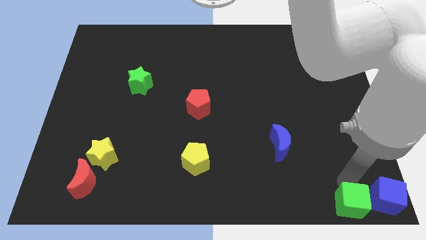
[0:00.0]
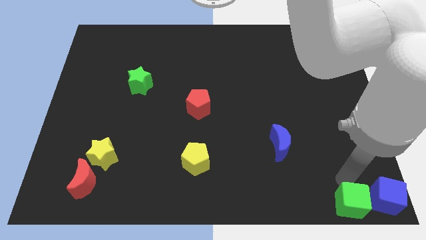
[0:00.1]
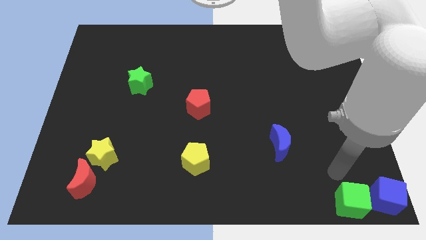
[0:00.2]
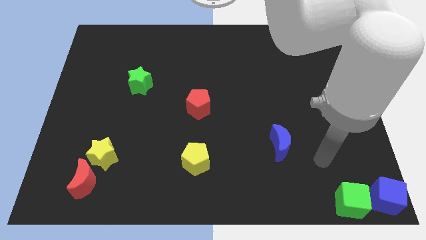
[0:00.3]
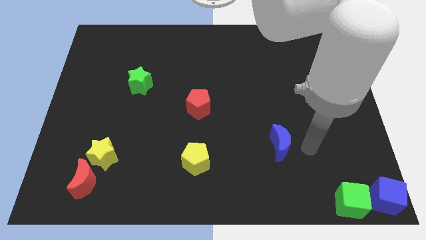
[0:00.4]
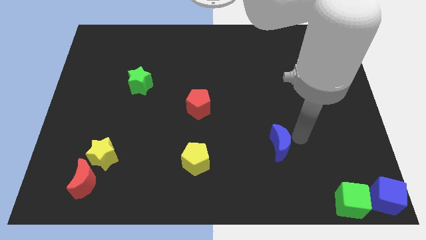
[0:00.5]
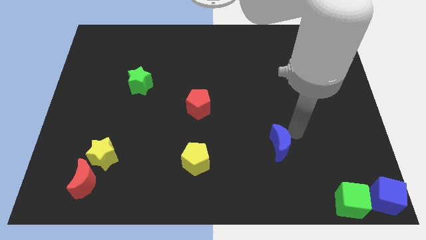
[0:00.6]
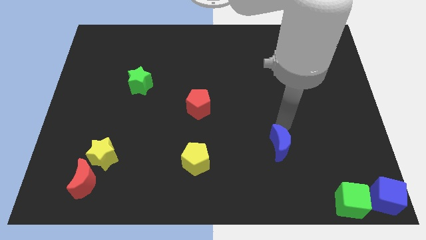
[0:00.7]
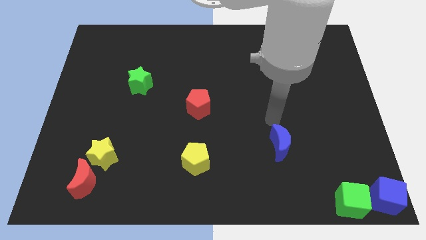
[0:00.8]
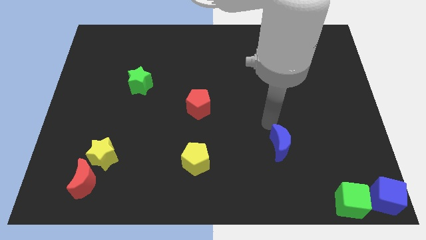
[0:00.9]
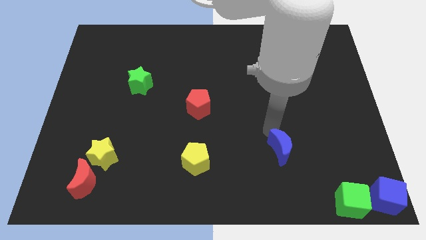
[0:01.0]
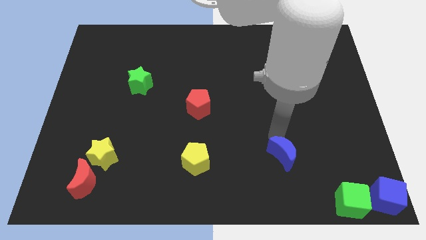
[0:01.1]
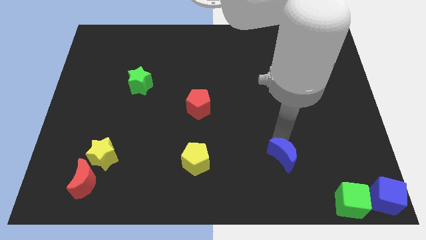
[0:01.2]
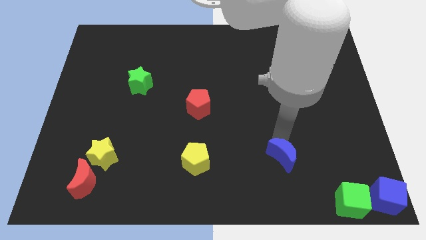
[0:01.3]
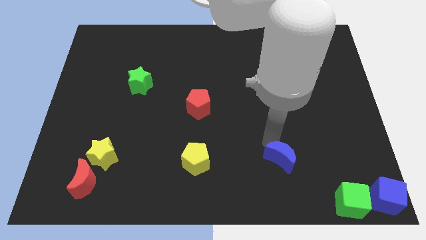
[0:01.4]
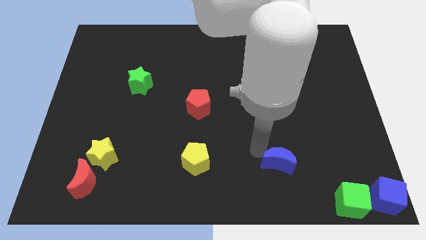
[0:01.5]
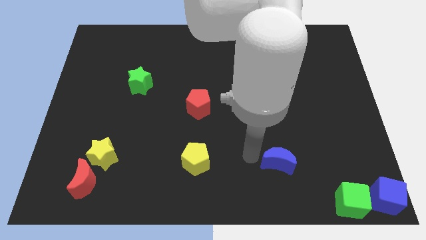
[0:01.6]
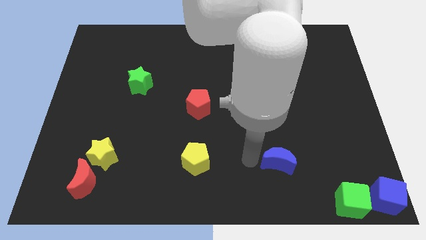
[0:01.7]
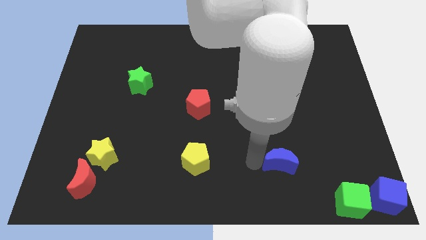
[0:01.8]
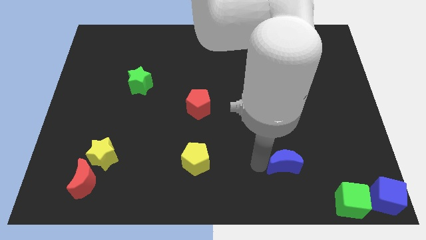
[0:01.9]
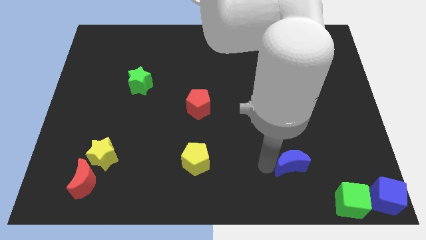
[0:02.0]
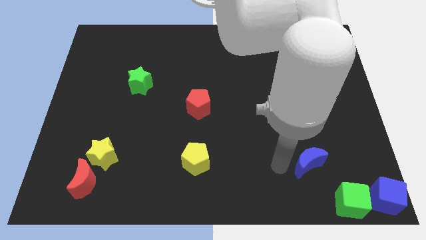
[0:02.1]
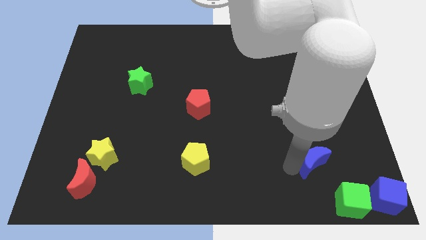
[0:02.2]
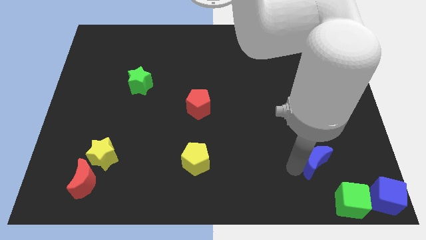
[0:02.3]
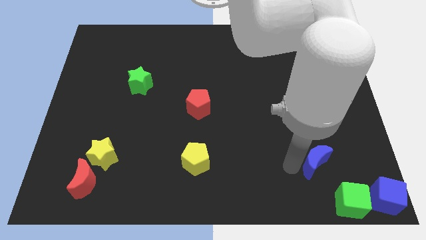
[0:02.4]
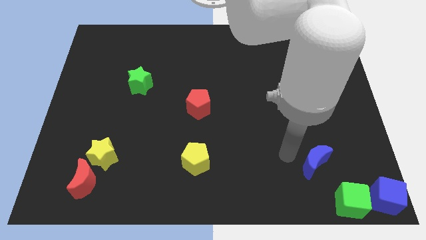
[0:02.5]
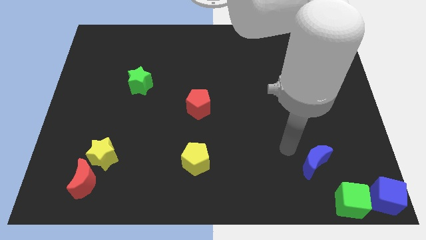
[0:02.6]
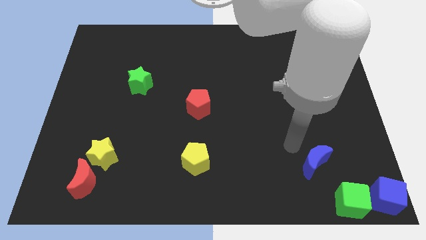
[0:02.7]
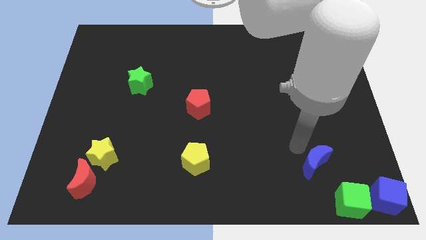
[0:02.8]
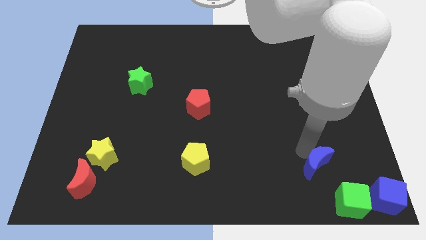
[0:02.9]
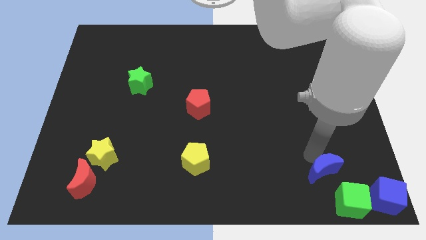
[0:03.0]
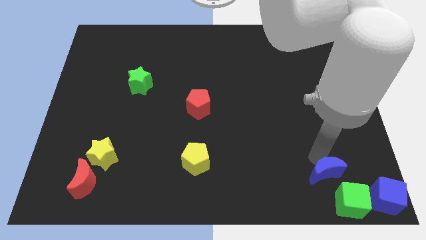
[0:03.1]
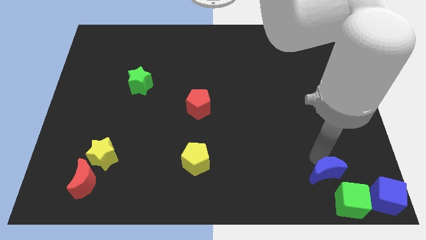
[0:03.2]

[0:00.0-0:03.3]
place the blue moon at the top left side of green cube

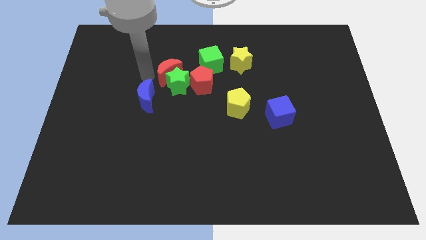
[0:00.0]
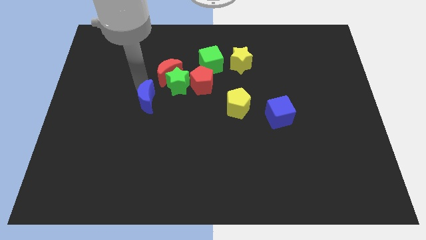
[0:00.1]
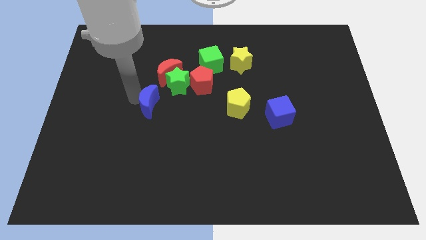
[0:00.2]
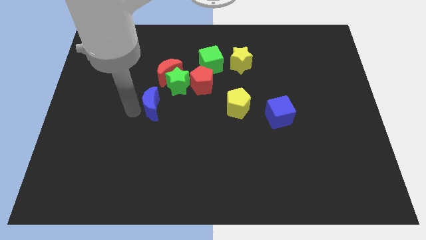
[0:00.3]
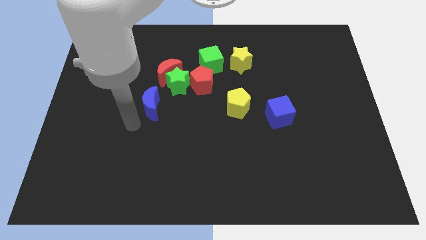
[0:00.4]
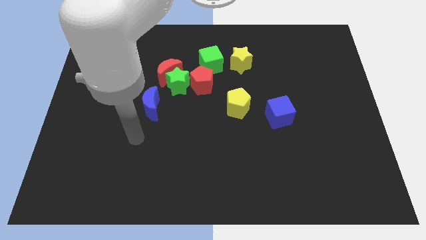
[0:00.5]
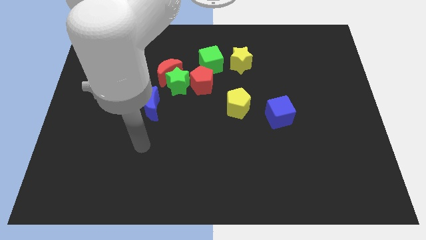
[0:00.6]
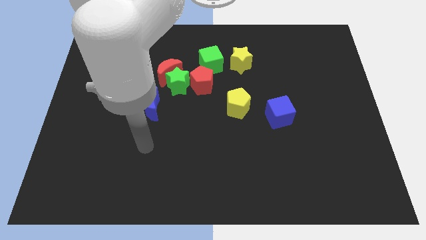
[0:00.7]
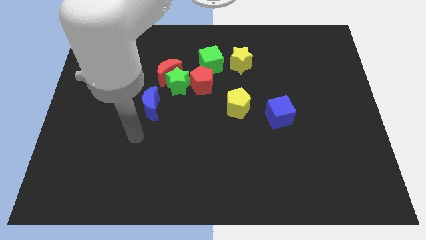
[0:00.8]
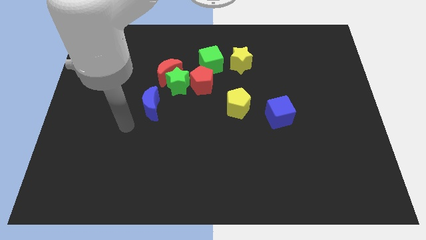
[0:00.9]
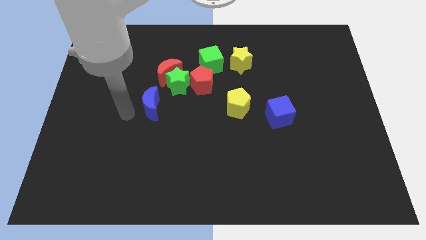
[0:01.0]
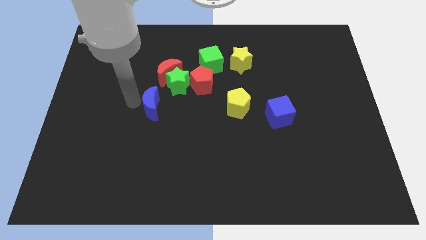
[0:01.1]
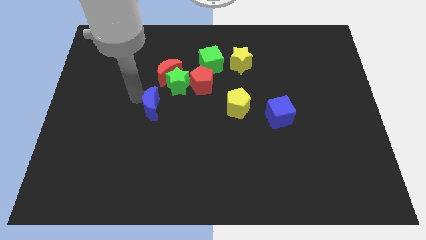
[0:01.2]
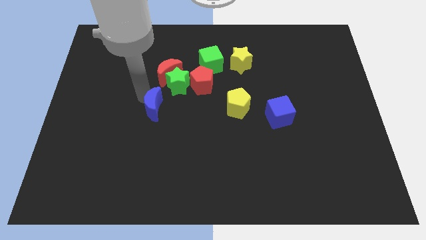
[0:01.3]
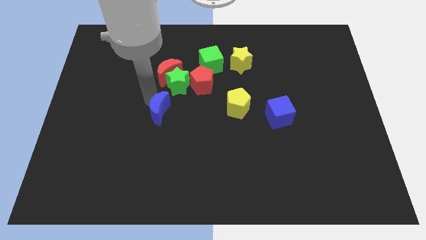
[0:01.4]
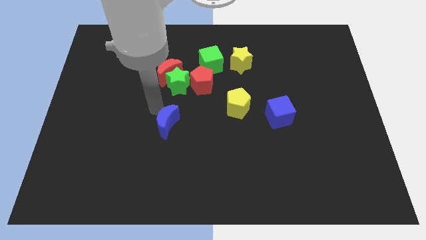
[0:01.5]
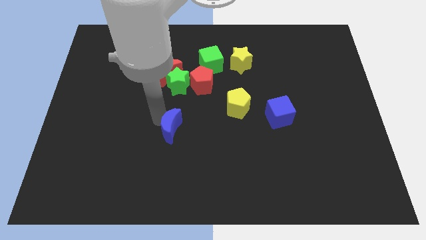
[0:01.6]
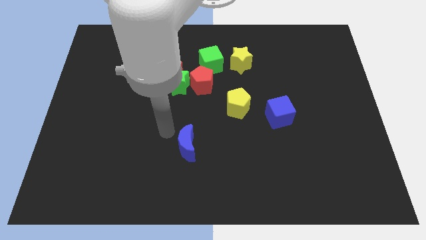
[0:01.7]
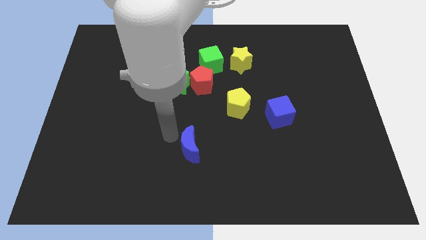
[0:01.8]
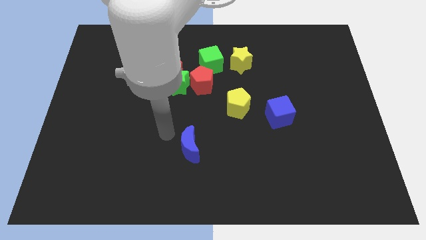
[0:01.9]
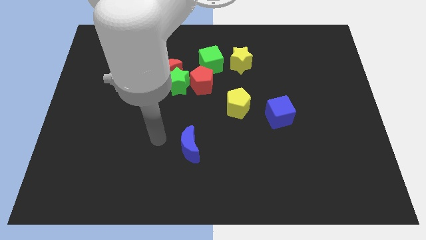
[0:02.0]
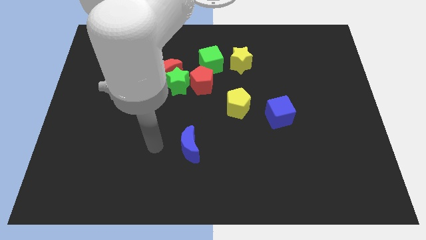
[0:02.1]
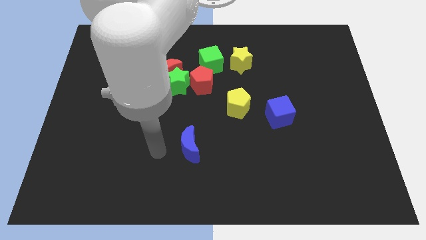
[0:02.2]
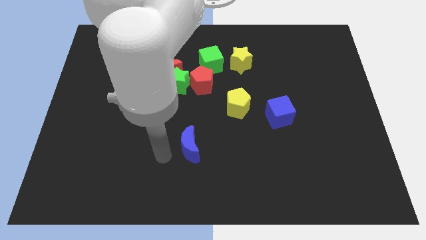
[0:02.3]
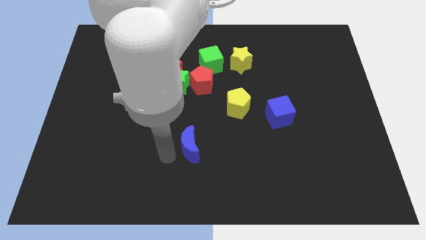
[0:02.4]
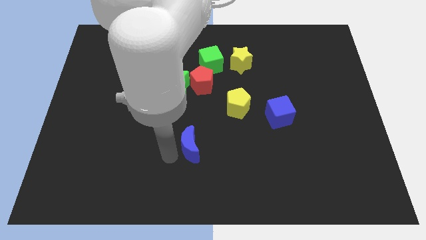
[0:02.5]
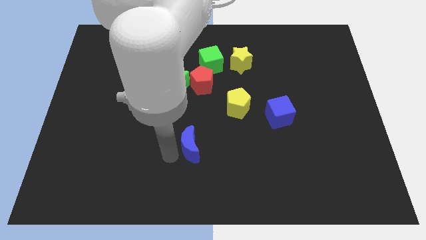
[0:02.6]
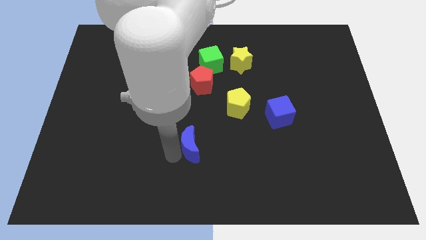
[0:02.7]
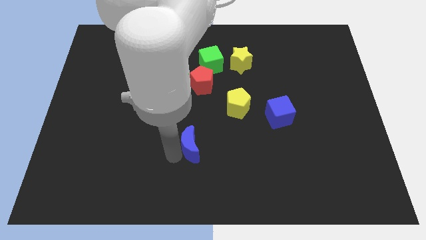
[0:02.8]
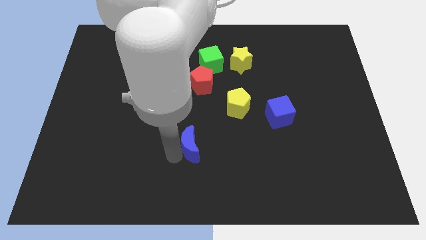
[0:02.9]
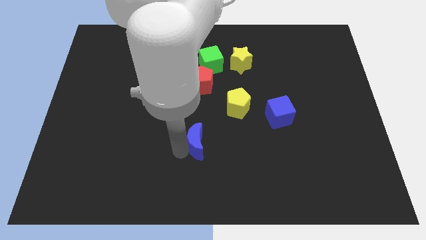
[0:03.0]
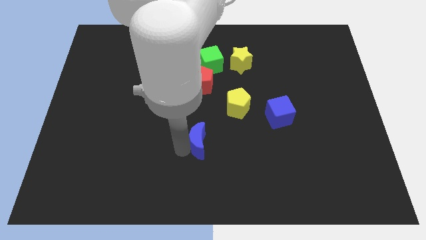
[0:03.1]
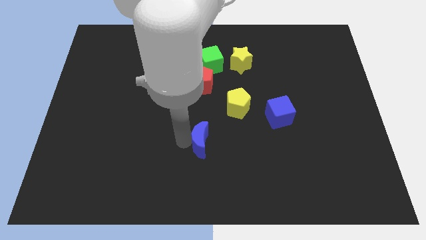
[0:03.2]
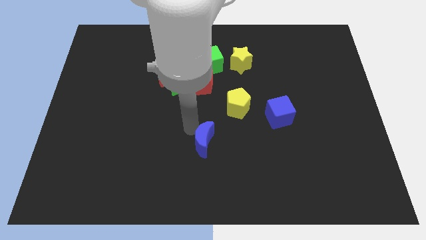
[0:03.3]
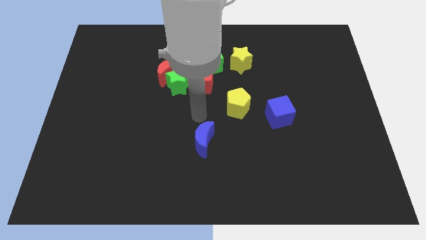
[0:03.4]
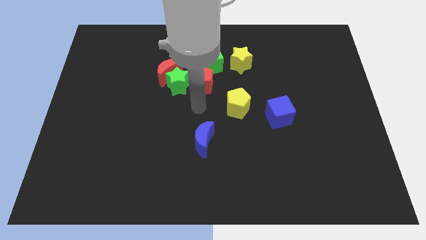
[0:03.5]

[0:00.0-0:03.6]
move the blue crescent to the bottom of the board

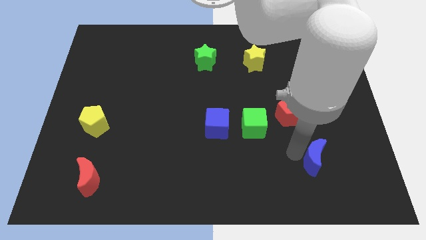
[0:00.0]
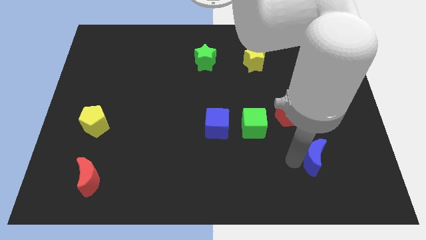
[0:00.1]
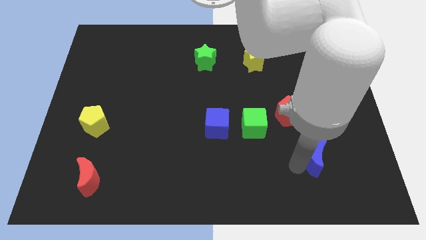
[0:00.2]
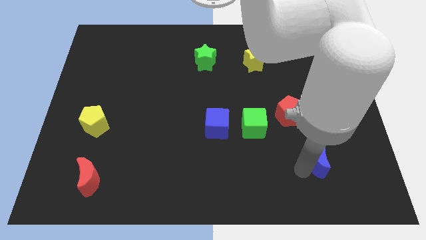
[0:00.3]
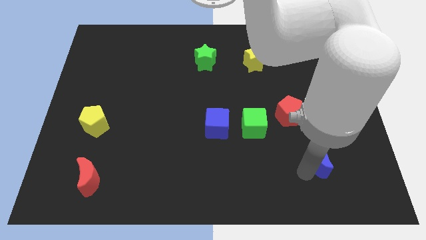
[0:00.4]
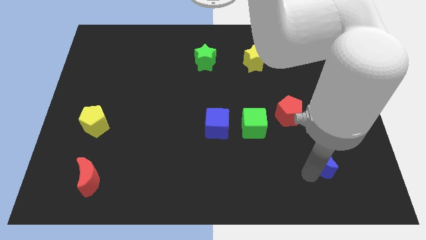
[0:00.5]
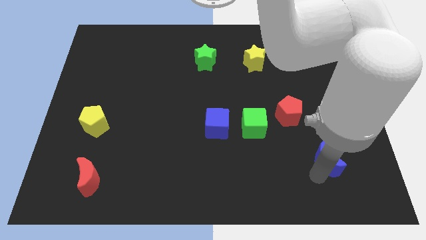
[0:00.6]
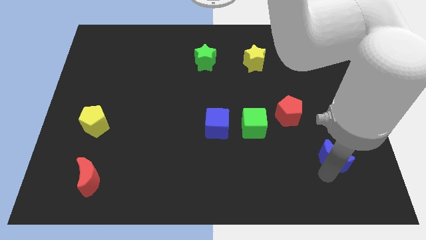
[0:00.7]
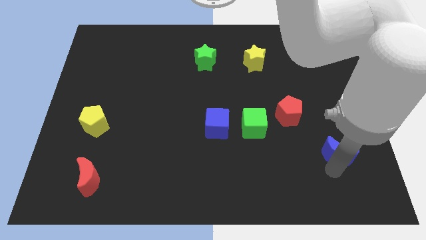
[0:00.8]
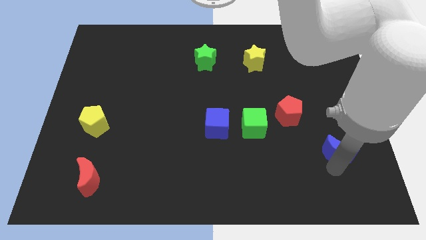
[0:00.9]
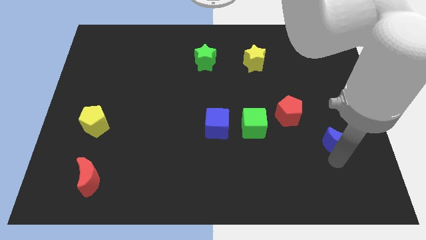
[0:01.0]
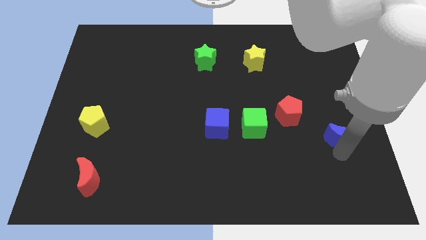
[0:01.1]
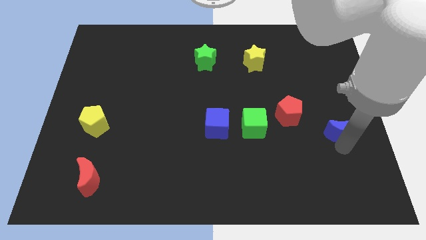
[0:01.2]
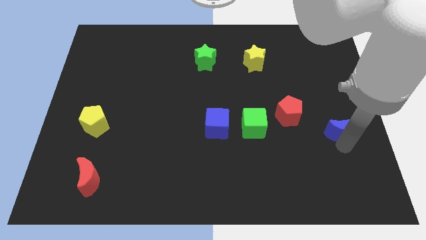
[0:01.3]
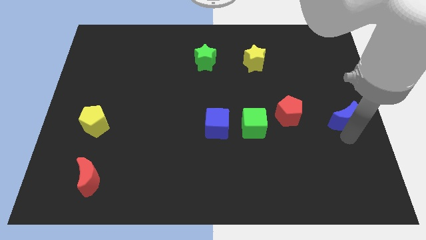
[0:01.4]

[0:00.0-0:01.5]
move the blue crescent to the right of the red pentagon

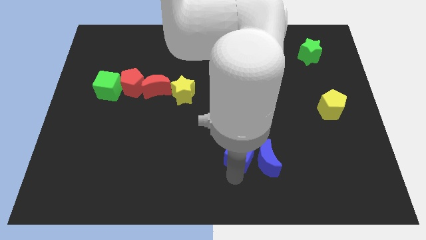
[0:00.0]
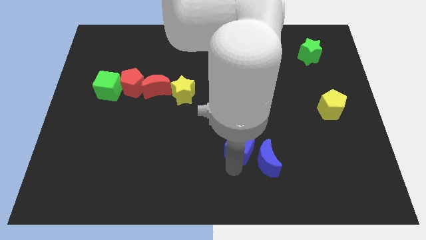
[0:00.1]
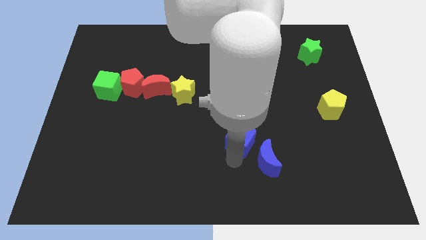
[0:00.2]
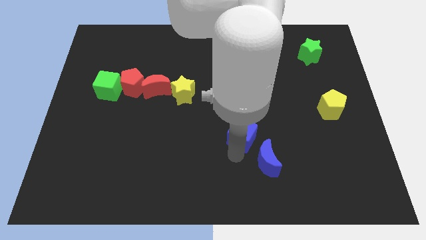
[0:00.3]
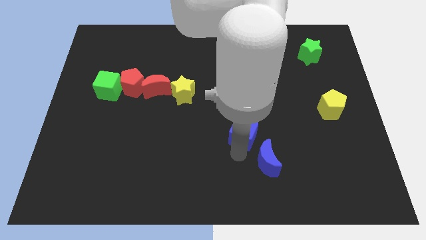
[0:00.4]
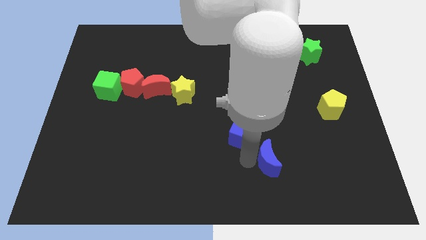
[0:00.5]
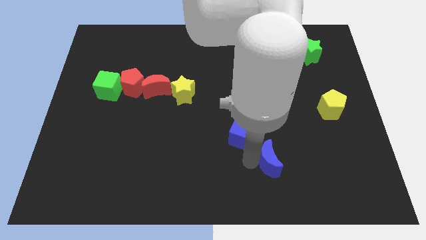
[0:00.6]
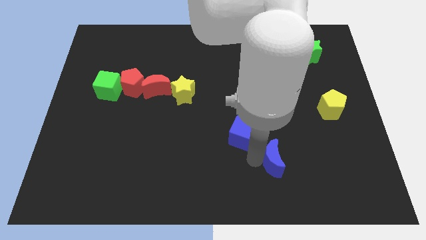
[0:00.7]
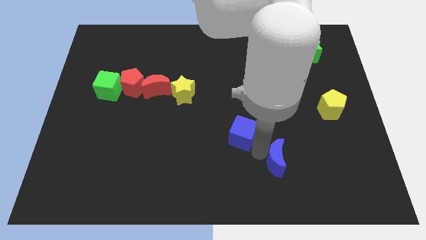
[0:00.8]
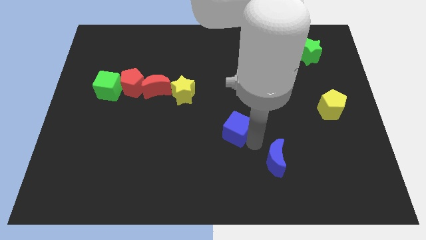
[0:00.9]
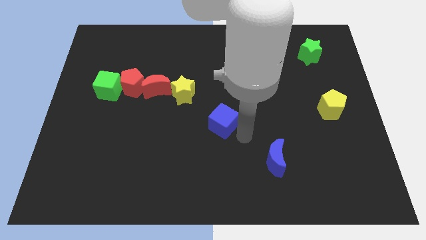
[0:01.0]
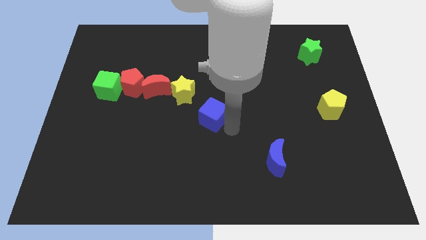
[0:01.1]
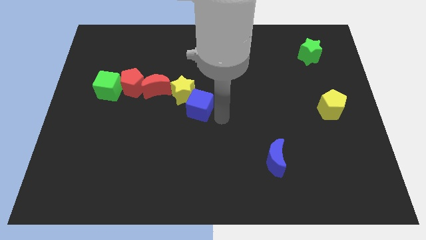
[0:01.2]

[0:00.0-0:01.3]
place the blue cube diagonally bottom right to the yellow star
